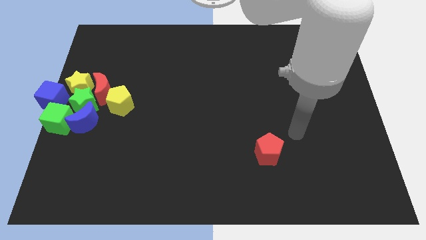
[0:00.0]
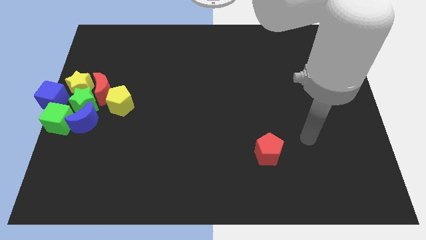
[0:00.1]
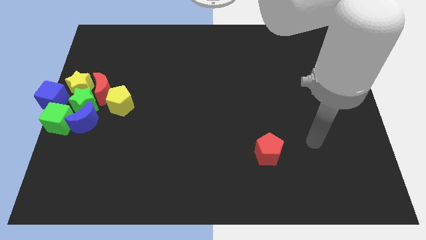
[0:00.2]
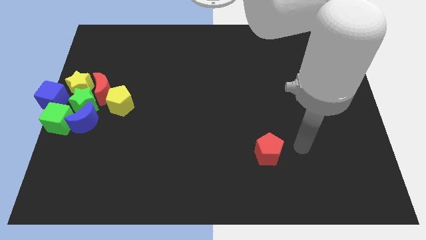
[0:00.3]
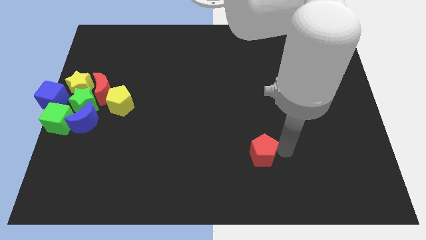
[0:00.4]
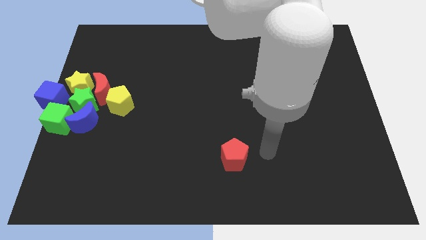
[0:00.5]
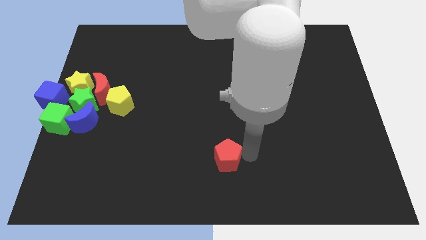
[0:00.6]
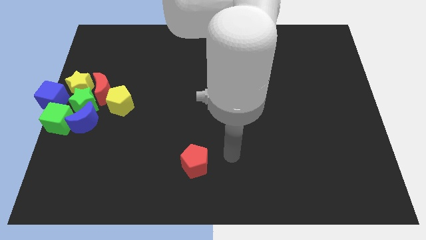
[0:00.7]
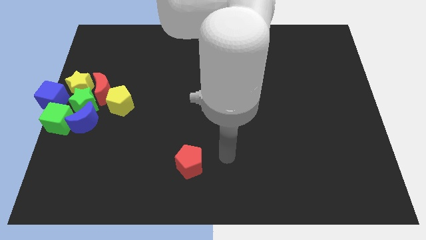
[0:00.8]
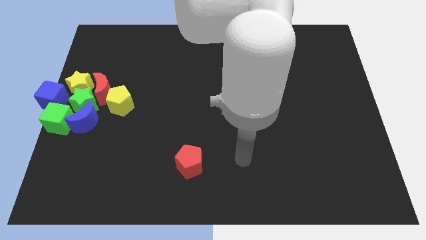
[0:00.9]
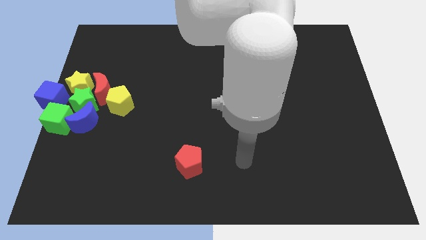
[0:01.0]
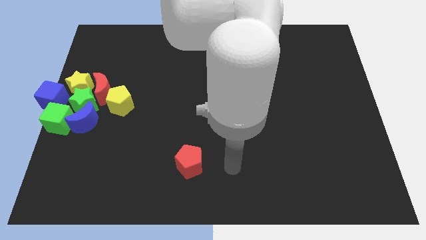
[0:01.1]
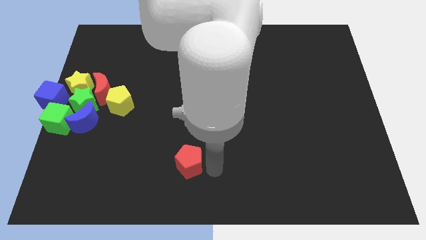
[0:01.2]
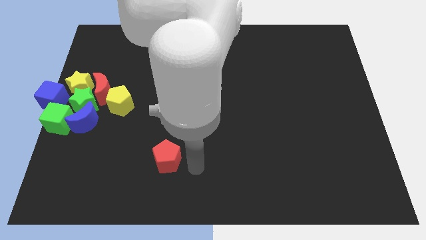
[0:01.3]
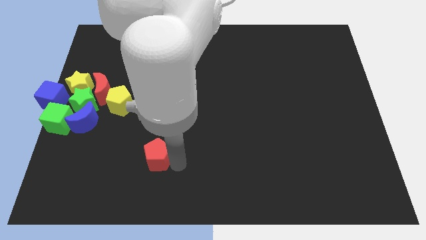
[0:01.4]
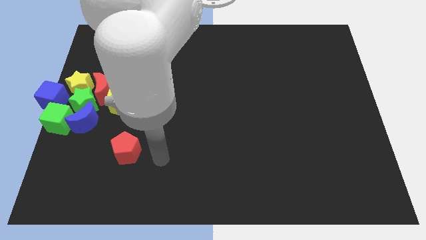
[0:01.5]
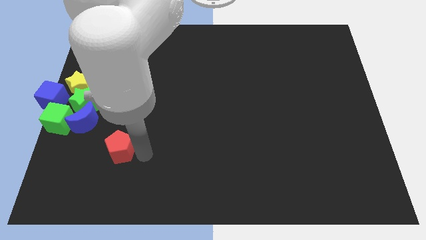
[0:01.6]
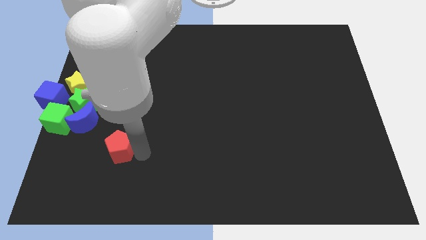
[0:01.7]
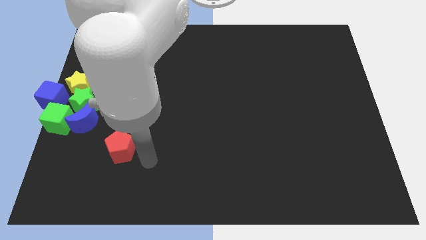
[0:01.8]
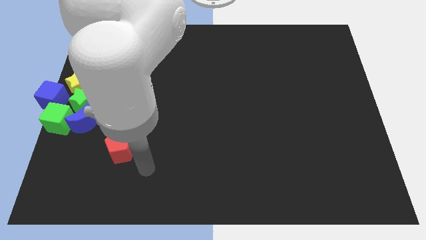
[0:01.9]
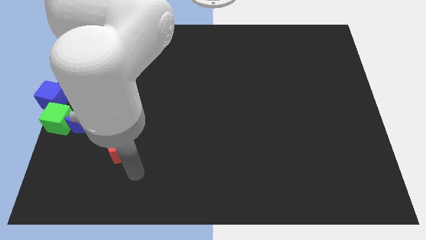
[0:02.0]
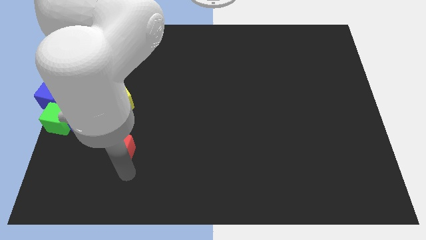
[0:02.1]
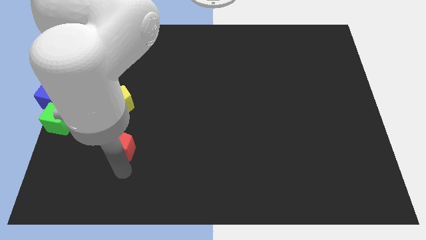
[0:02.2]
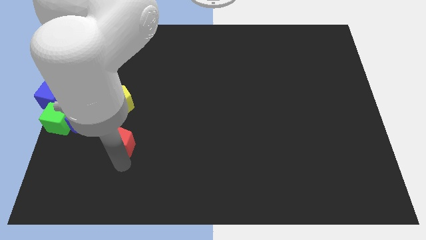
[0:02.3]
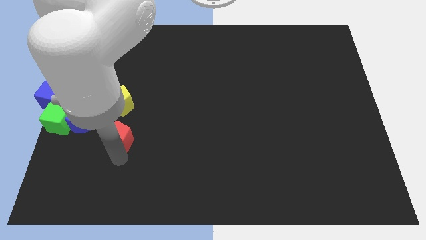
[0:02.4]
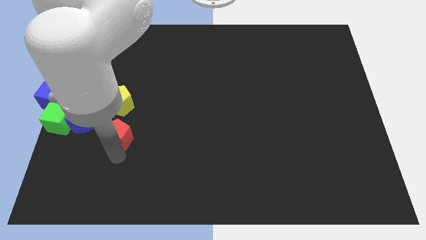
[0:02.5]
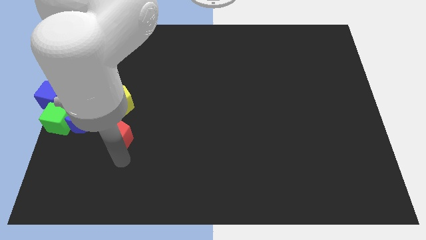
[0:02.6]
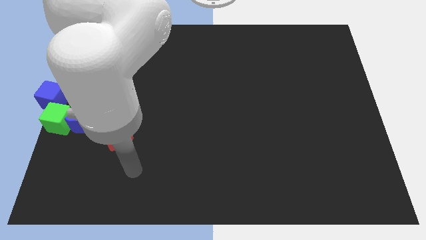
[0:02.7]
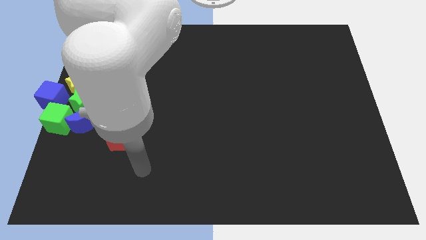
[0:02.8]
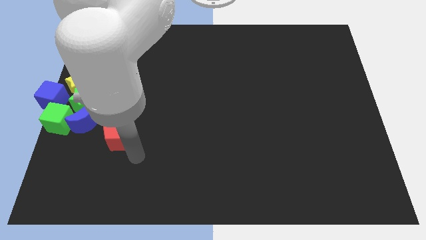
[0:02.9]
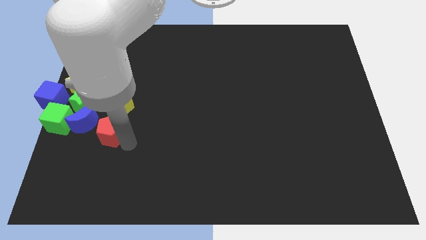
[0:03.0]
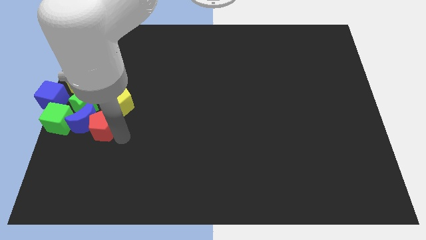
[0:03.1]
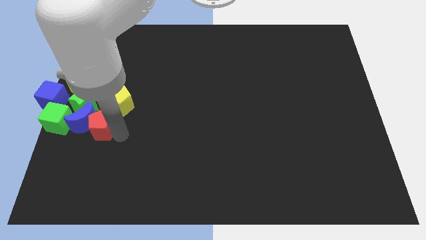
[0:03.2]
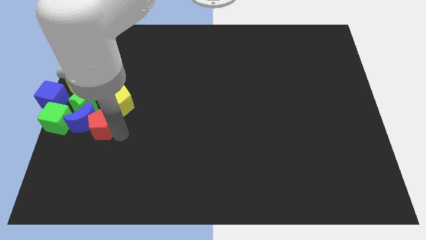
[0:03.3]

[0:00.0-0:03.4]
slide the red pentagon to the right side of the blue moon

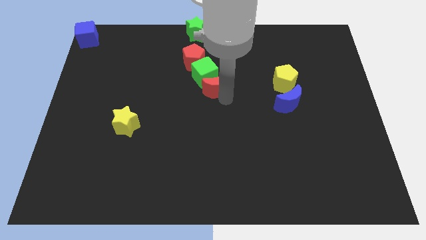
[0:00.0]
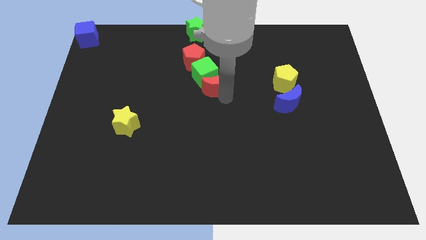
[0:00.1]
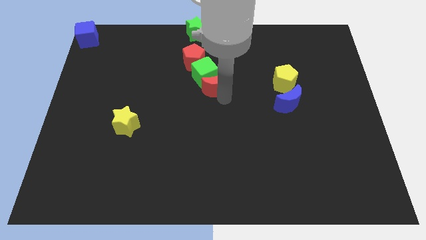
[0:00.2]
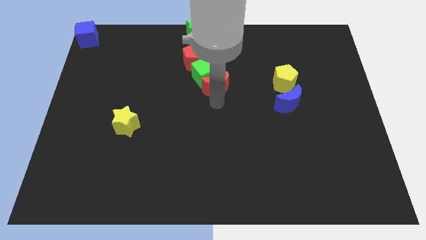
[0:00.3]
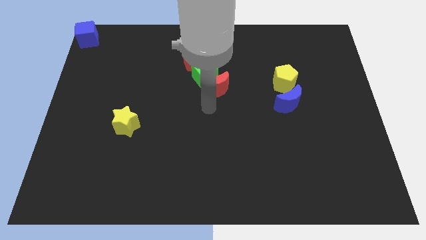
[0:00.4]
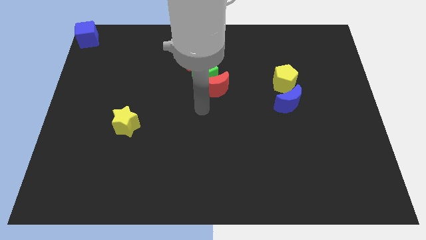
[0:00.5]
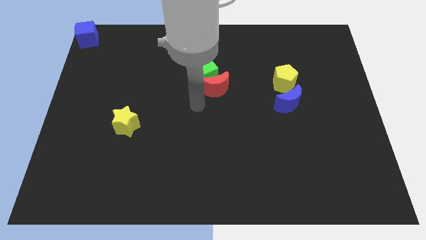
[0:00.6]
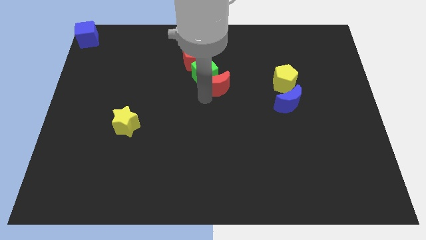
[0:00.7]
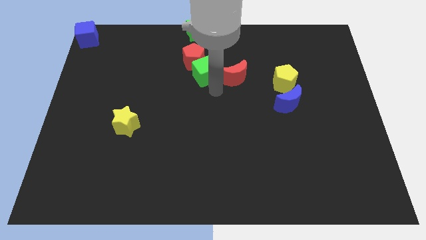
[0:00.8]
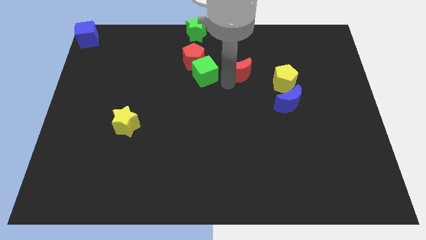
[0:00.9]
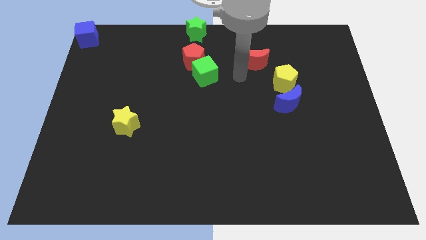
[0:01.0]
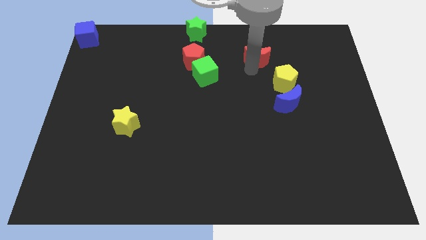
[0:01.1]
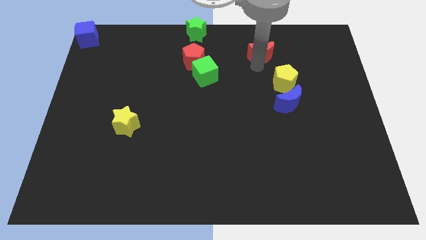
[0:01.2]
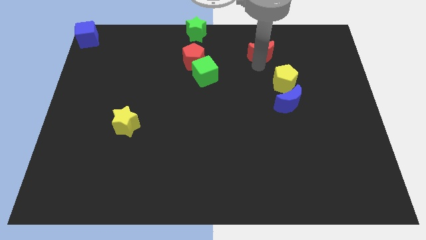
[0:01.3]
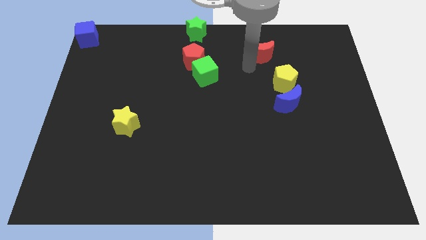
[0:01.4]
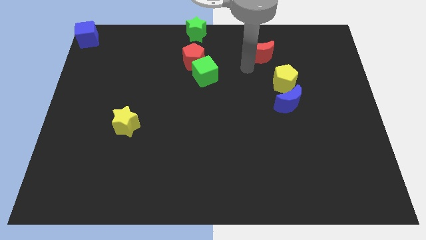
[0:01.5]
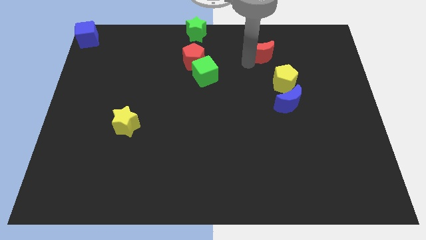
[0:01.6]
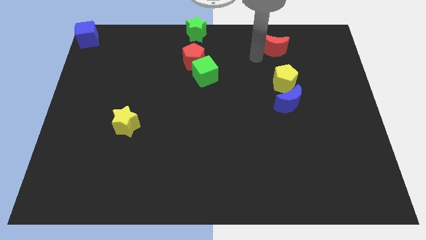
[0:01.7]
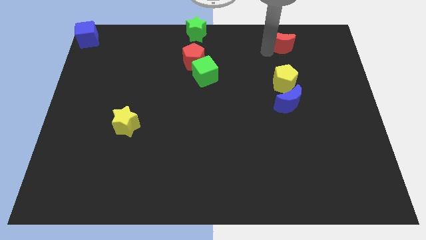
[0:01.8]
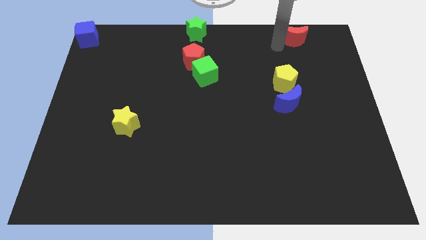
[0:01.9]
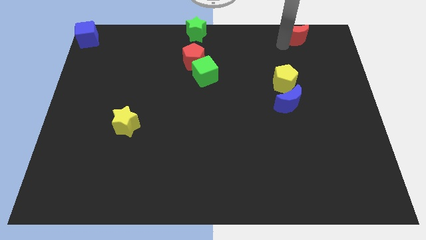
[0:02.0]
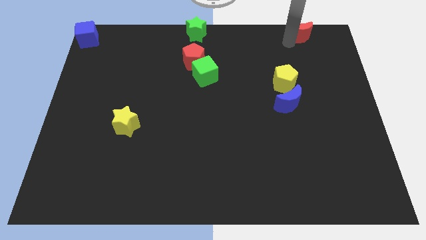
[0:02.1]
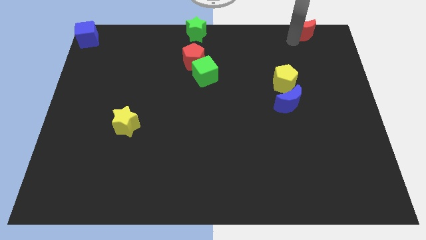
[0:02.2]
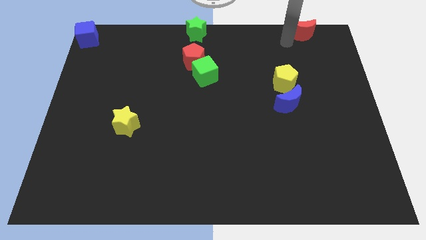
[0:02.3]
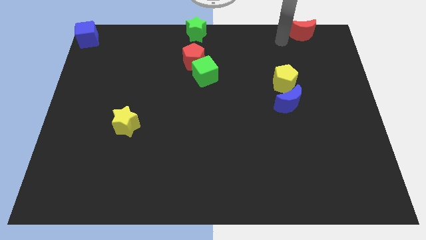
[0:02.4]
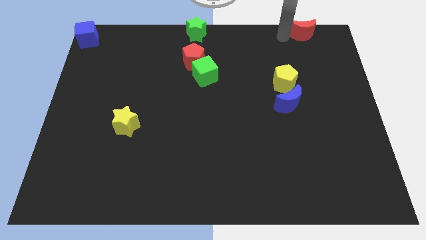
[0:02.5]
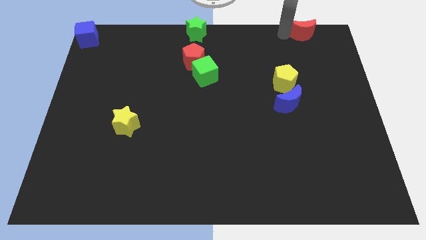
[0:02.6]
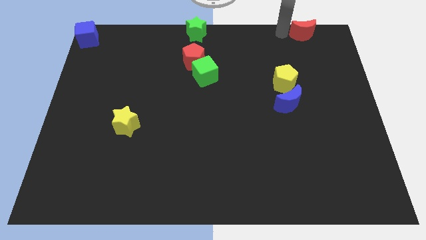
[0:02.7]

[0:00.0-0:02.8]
separate the green cube and red moon

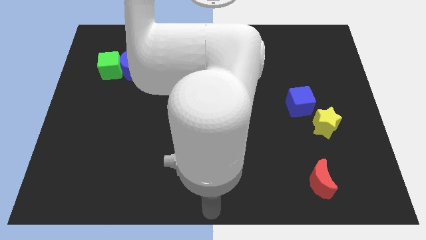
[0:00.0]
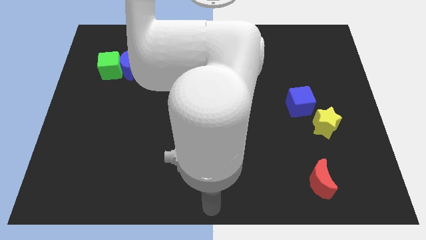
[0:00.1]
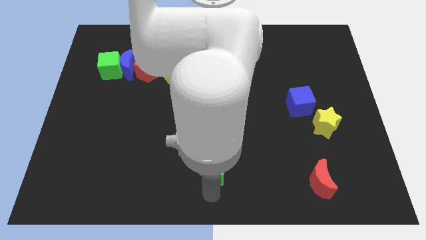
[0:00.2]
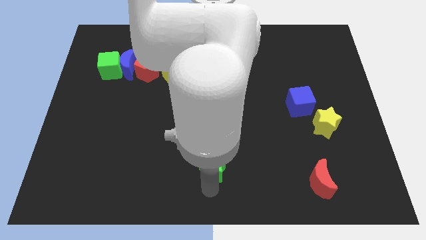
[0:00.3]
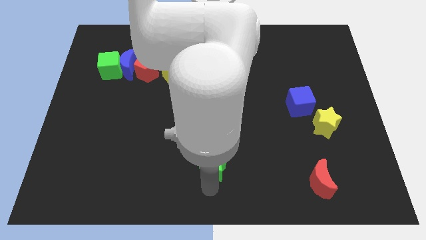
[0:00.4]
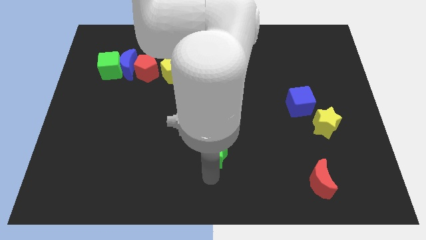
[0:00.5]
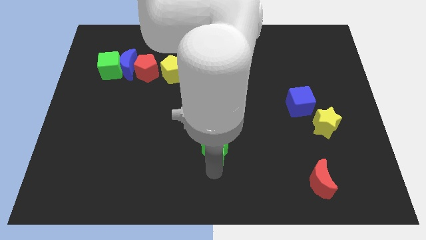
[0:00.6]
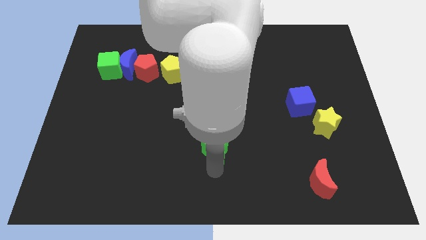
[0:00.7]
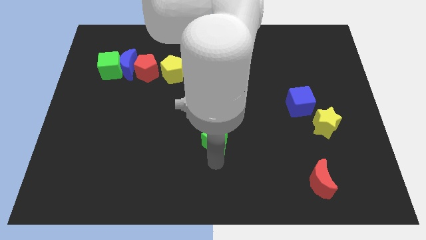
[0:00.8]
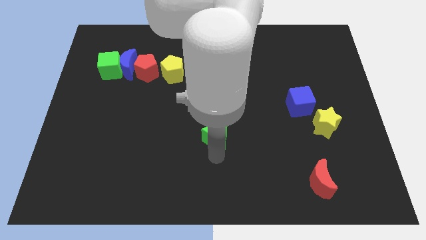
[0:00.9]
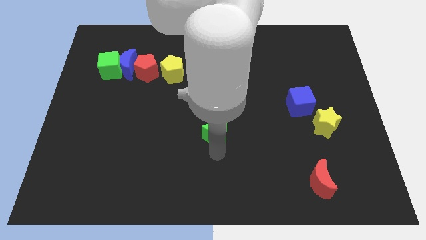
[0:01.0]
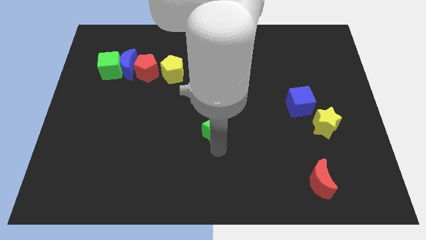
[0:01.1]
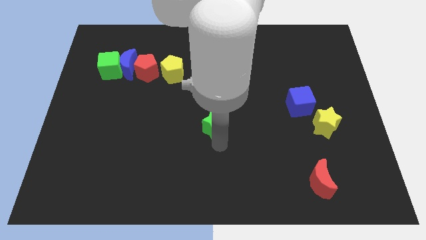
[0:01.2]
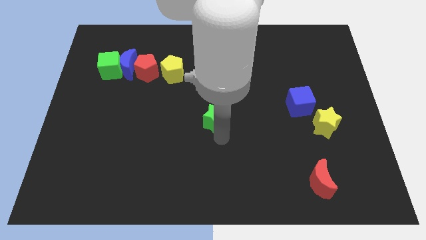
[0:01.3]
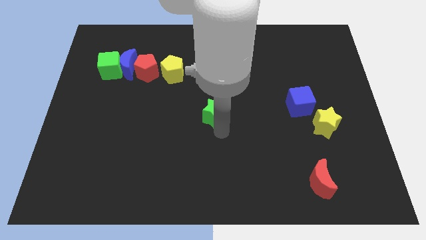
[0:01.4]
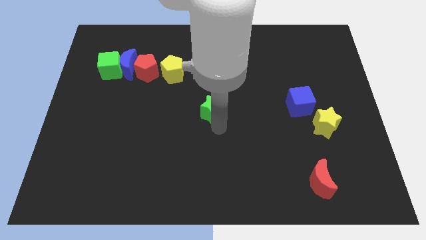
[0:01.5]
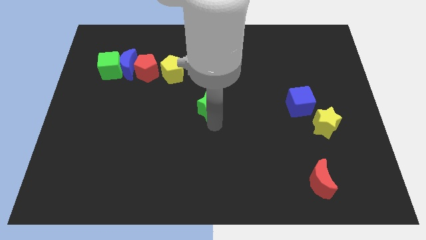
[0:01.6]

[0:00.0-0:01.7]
place the green star at the center of the board

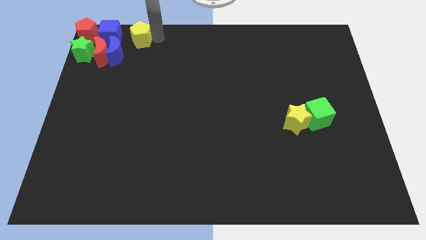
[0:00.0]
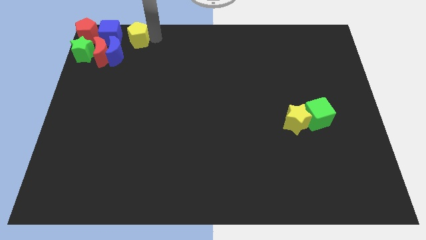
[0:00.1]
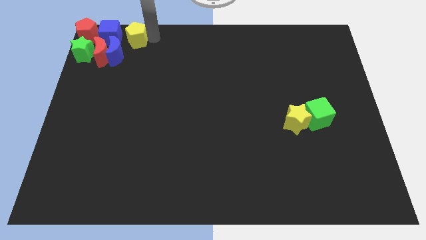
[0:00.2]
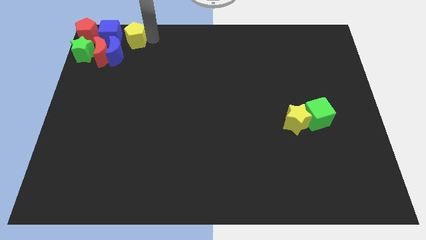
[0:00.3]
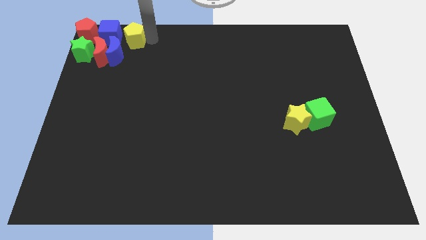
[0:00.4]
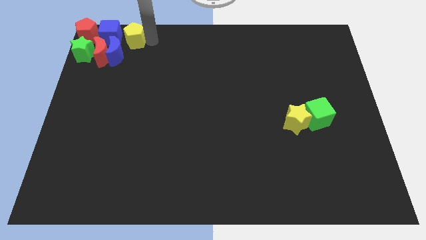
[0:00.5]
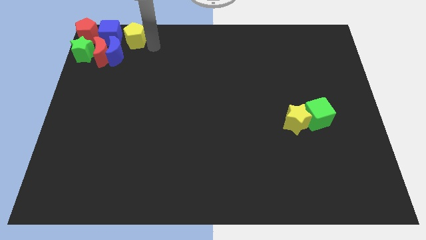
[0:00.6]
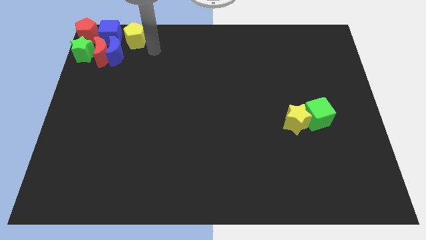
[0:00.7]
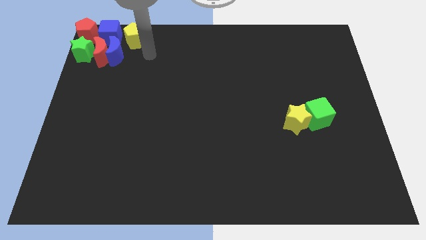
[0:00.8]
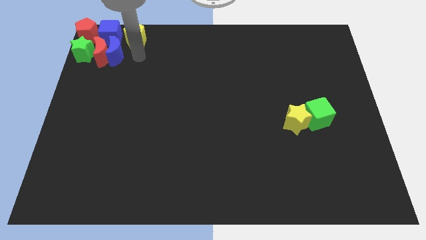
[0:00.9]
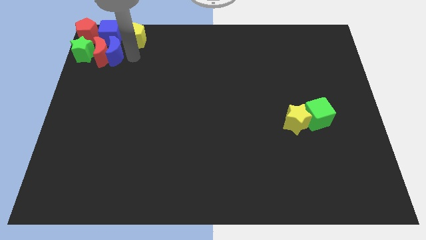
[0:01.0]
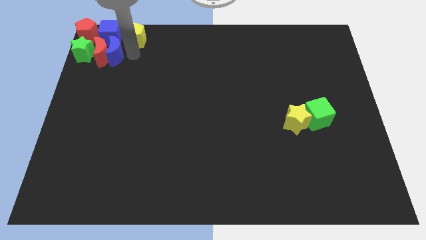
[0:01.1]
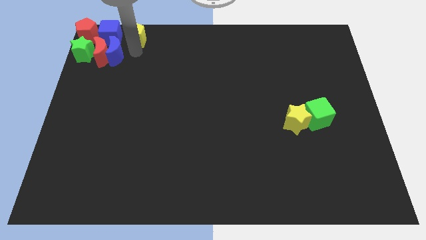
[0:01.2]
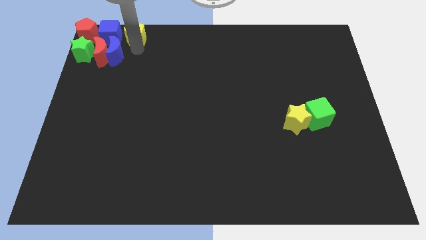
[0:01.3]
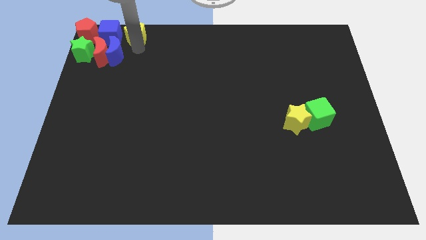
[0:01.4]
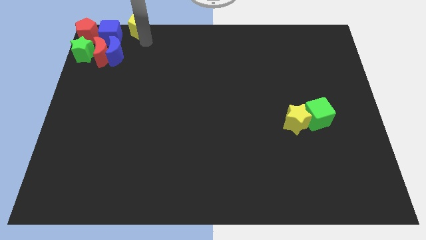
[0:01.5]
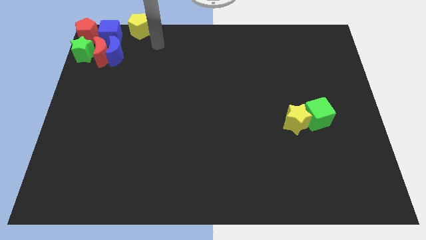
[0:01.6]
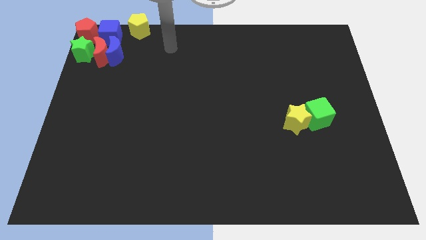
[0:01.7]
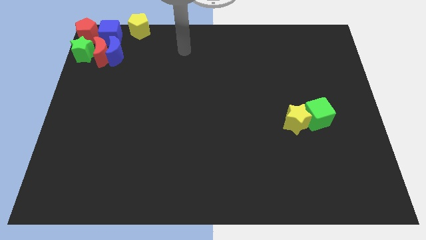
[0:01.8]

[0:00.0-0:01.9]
place the yellow pentagon to the right side of the blue cube
